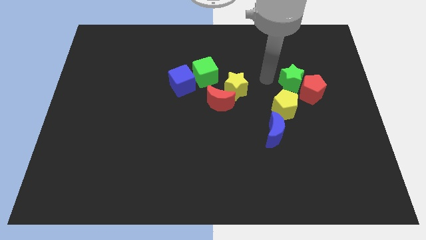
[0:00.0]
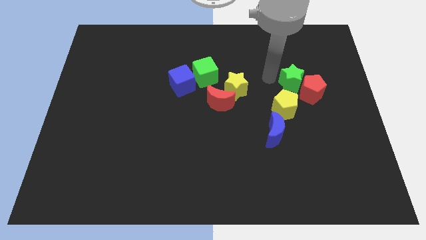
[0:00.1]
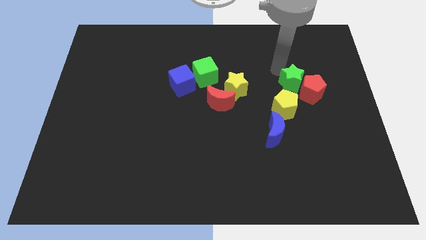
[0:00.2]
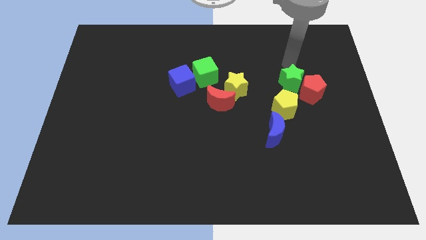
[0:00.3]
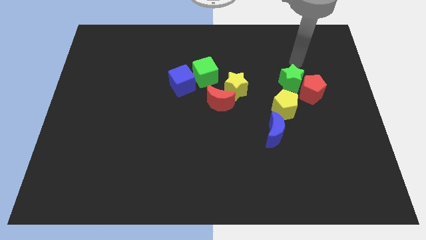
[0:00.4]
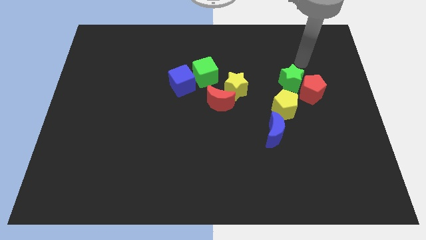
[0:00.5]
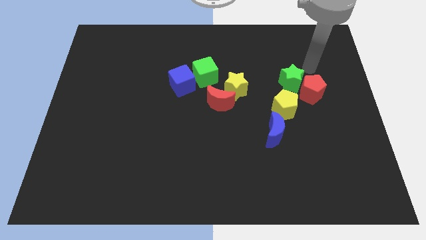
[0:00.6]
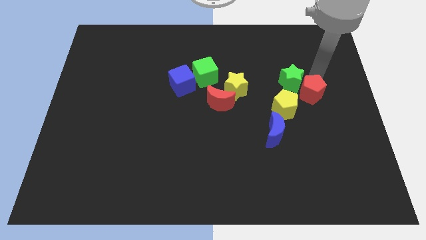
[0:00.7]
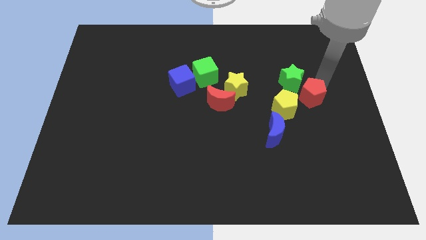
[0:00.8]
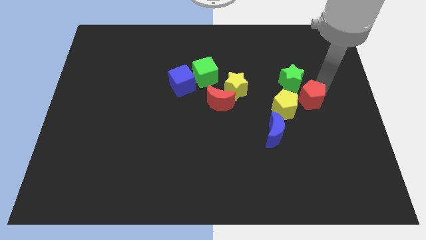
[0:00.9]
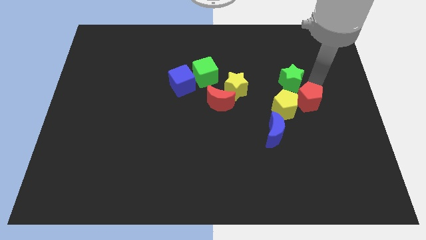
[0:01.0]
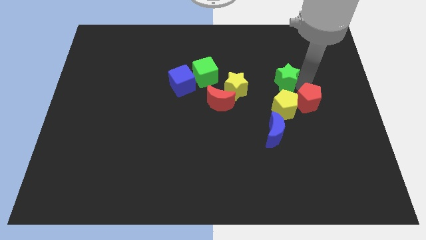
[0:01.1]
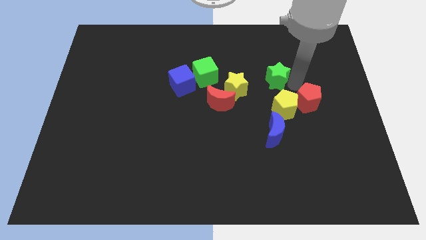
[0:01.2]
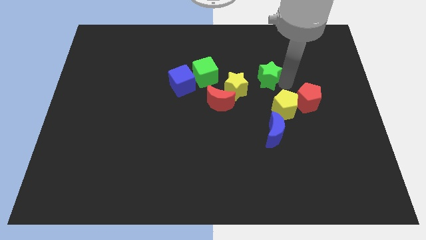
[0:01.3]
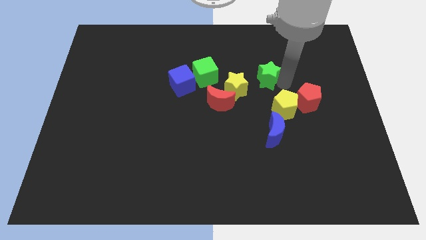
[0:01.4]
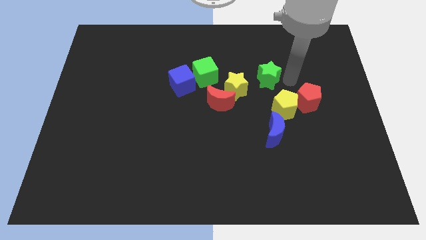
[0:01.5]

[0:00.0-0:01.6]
move the green star vertically to the top left side of the yellow pentagon

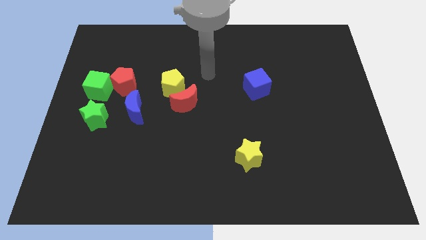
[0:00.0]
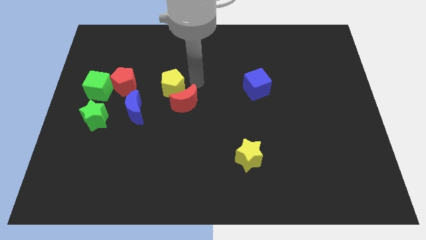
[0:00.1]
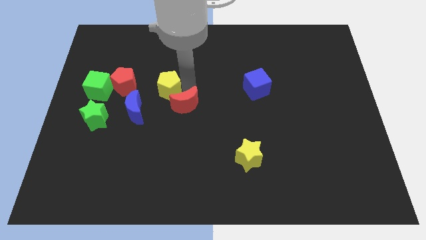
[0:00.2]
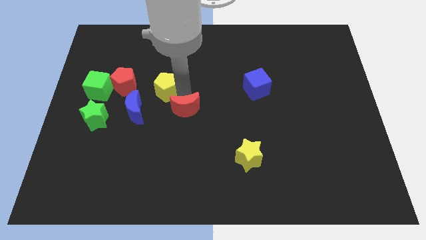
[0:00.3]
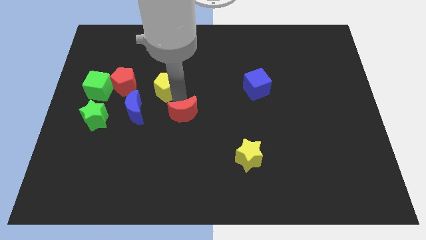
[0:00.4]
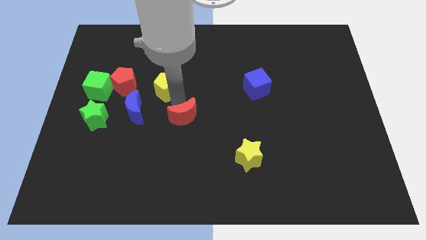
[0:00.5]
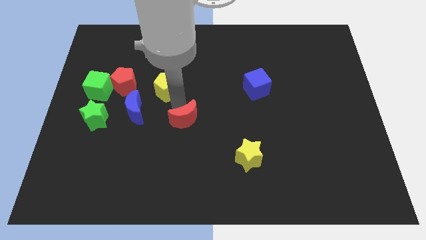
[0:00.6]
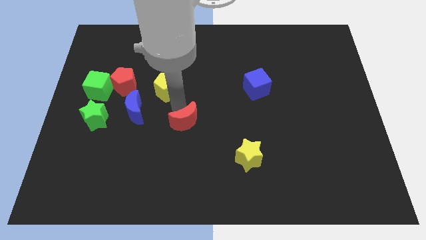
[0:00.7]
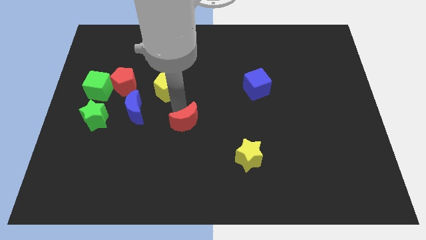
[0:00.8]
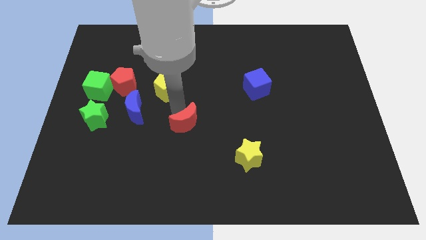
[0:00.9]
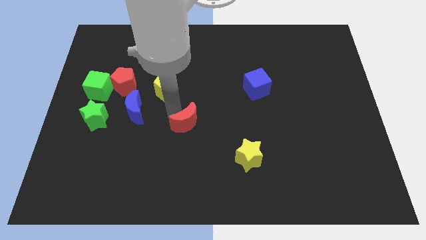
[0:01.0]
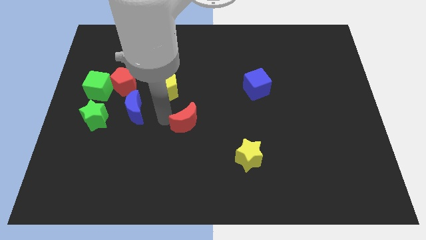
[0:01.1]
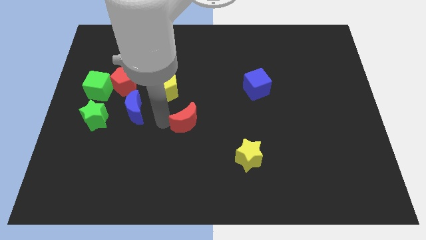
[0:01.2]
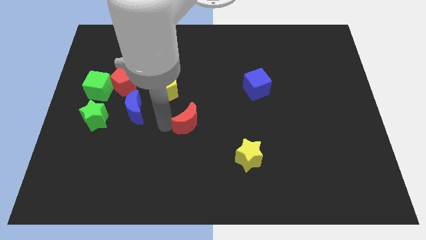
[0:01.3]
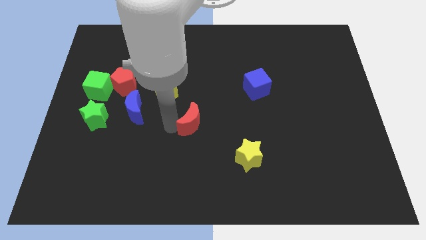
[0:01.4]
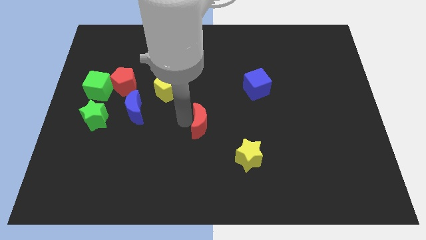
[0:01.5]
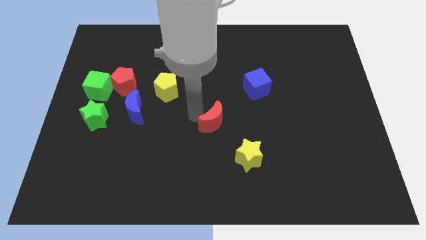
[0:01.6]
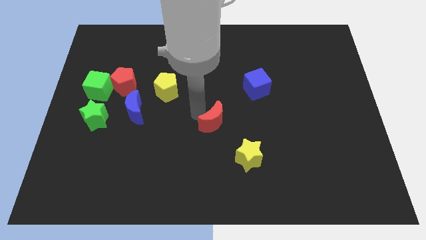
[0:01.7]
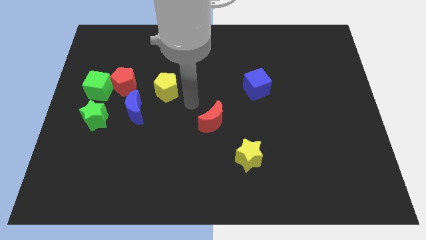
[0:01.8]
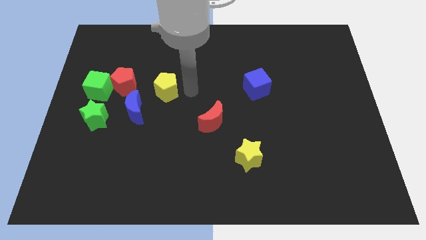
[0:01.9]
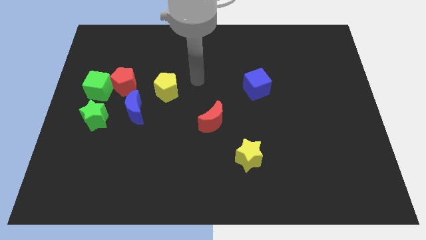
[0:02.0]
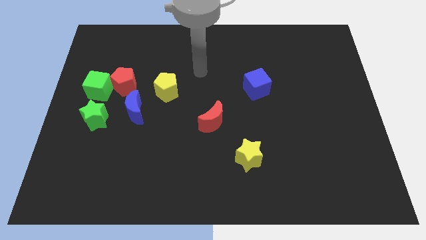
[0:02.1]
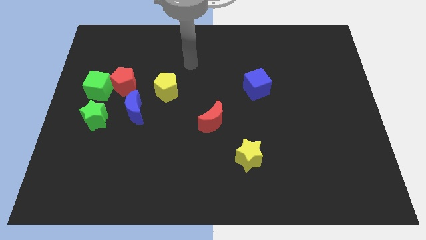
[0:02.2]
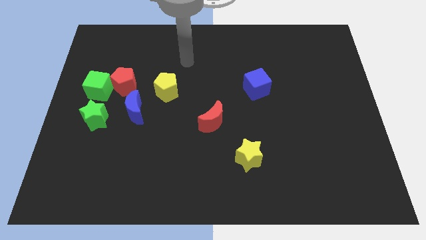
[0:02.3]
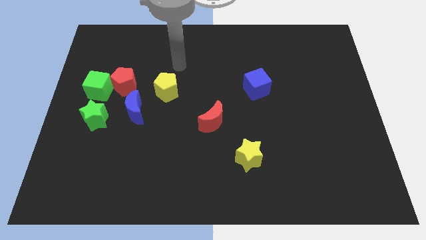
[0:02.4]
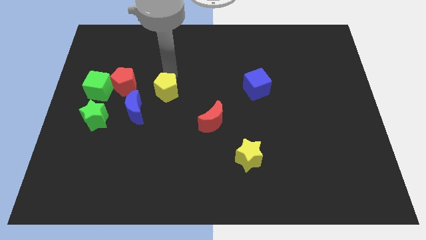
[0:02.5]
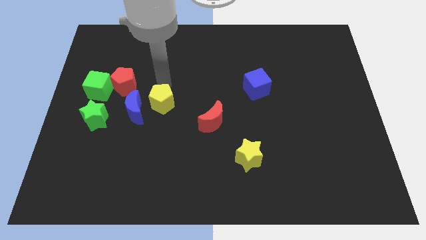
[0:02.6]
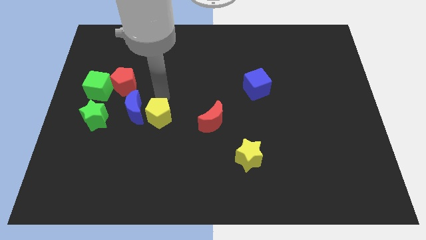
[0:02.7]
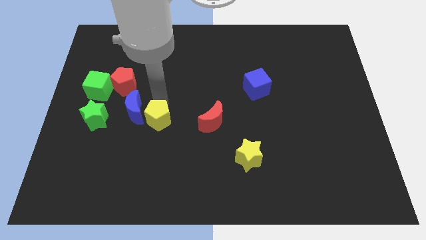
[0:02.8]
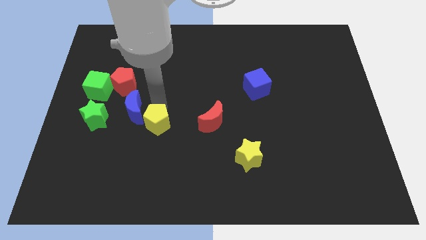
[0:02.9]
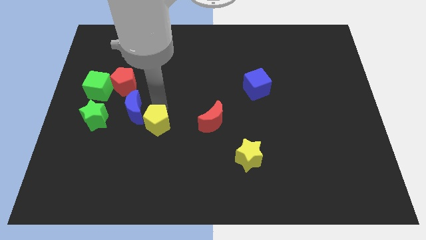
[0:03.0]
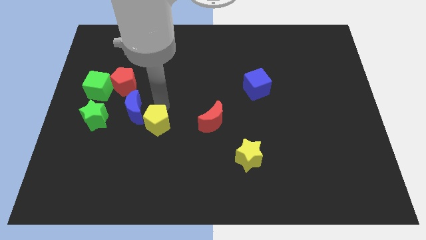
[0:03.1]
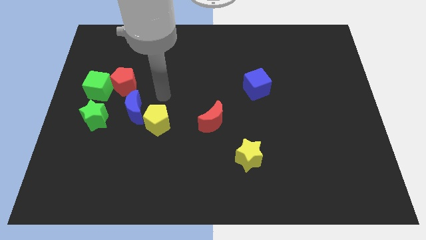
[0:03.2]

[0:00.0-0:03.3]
place red moon diagonally to the right of the yellow pentagon

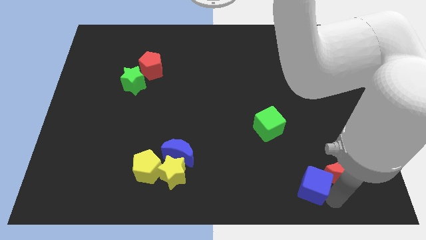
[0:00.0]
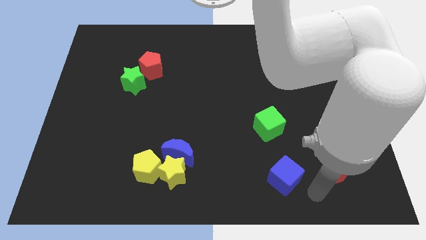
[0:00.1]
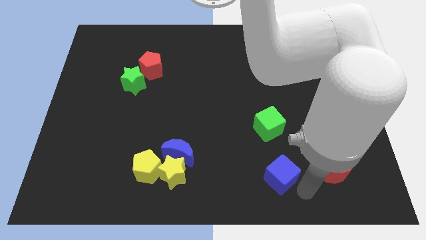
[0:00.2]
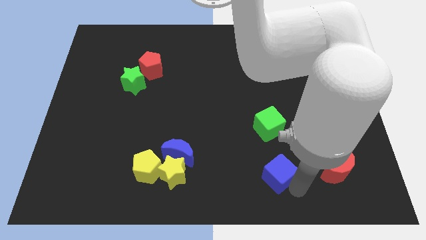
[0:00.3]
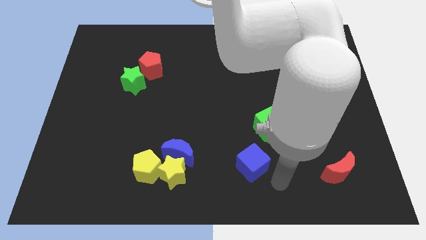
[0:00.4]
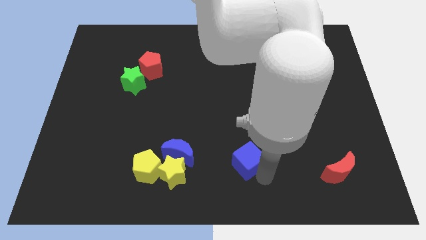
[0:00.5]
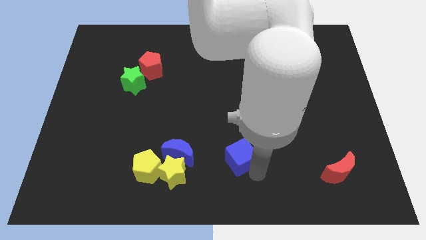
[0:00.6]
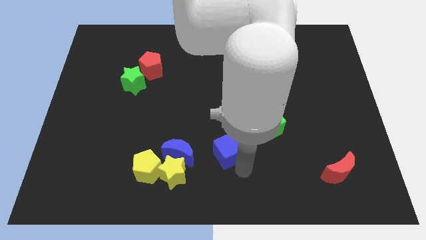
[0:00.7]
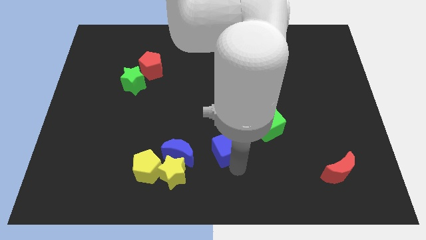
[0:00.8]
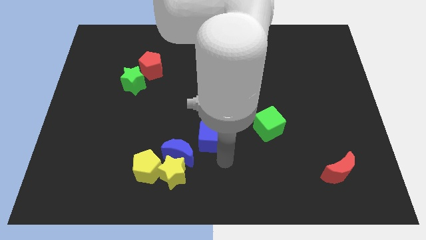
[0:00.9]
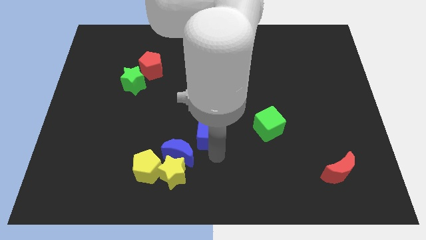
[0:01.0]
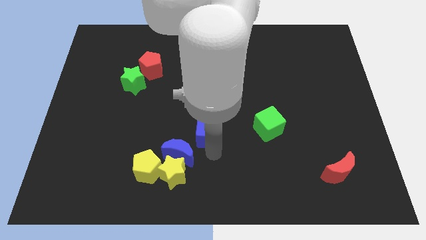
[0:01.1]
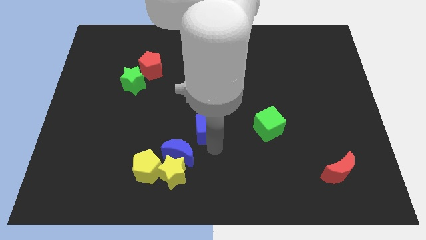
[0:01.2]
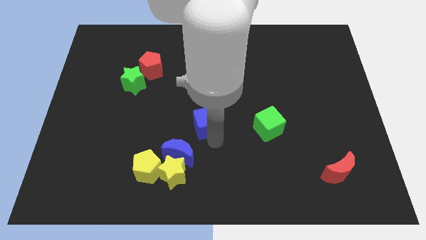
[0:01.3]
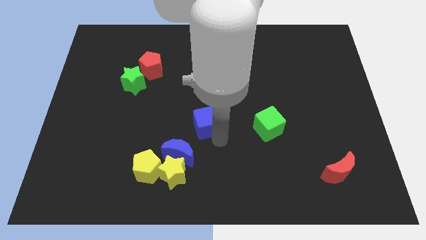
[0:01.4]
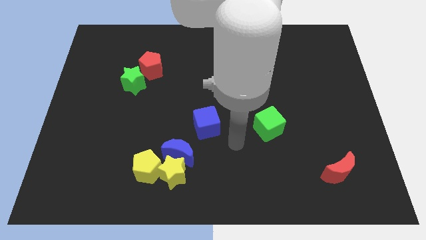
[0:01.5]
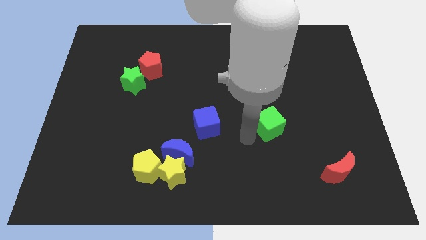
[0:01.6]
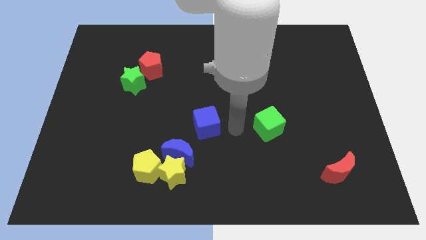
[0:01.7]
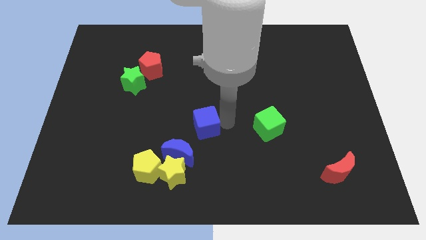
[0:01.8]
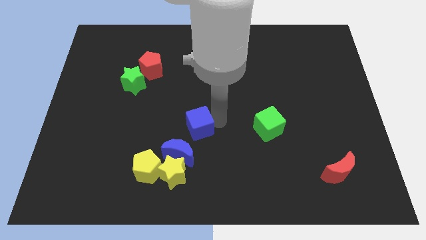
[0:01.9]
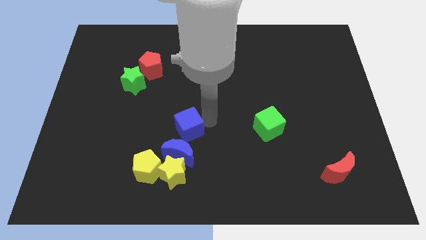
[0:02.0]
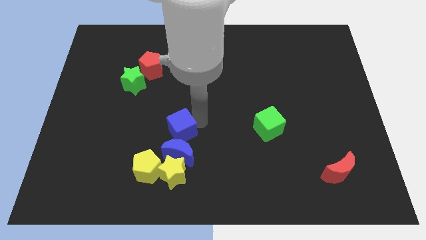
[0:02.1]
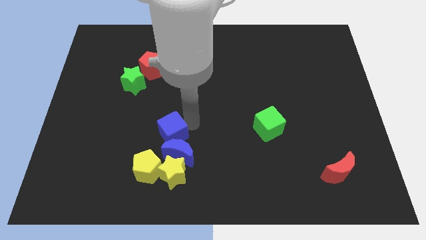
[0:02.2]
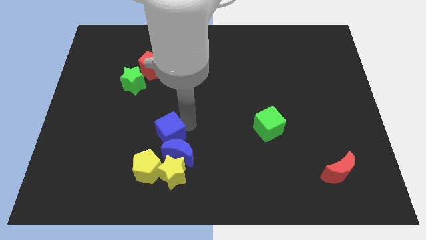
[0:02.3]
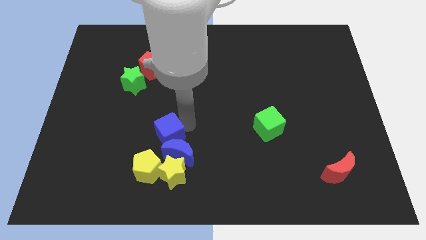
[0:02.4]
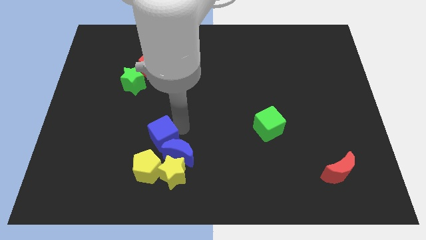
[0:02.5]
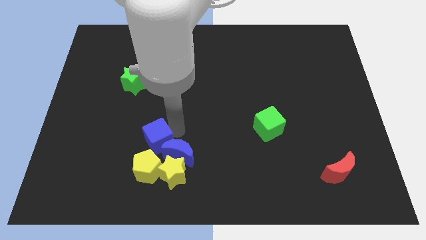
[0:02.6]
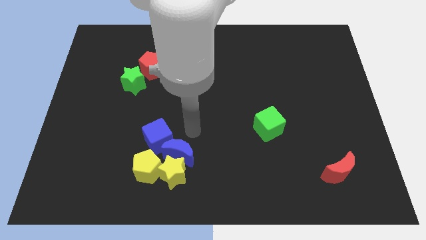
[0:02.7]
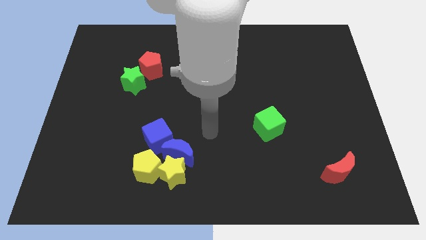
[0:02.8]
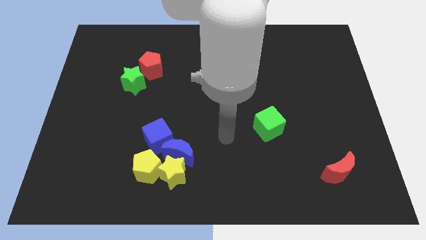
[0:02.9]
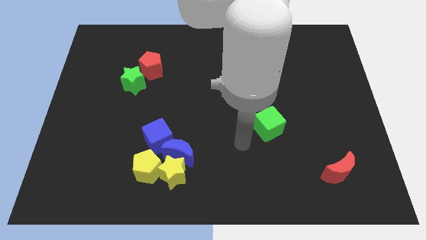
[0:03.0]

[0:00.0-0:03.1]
place blue cube over yellow pentagon

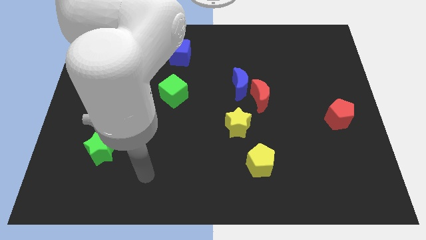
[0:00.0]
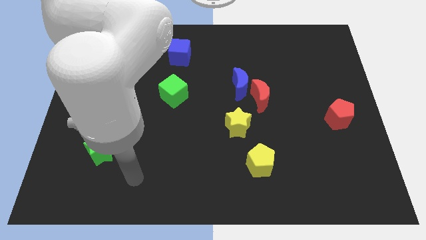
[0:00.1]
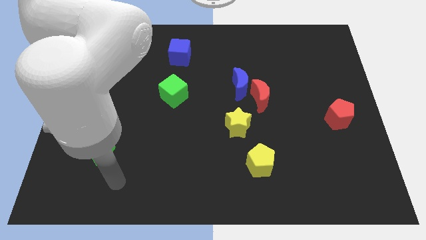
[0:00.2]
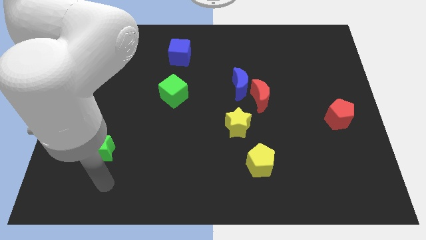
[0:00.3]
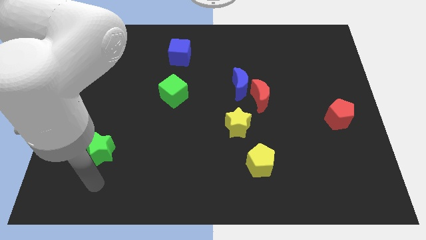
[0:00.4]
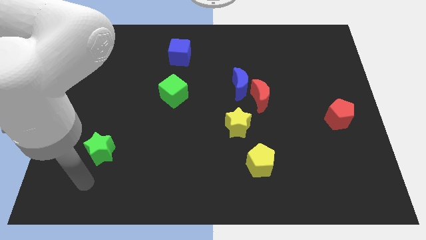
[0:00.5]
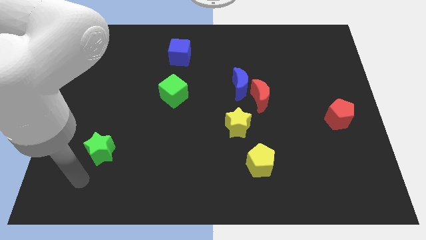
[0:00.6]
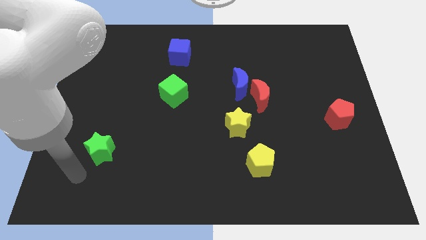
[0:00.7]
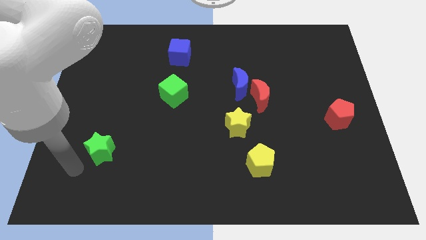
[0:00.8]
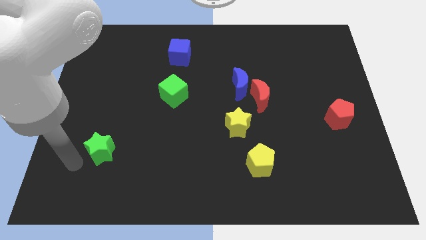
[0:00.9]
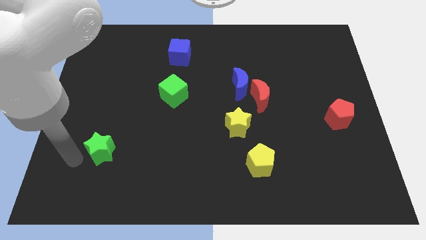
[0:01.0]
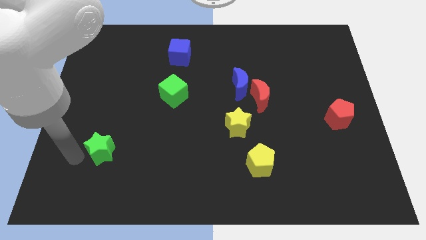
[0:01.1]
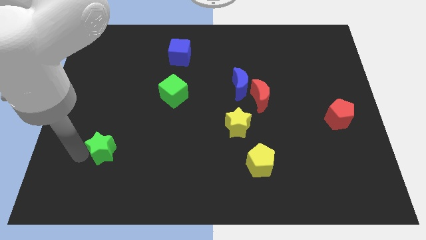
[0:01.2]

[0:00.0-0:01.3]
point your arm at the left of the green star
